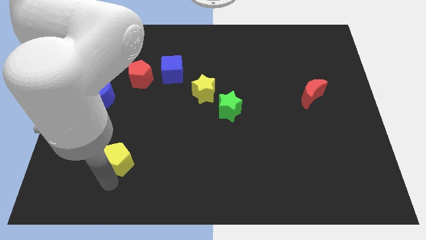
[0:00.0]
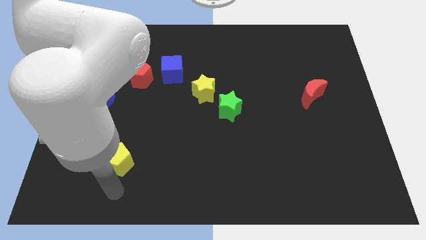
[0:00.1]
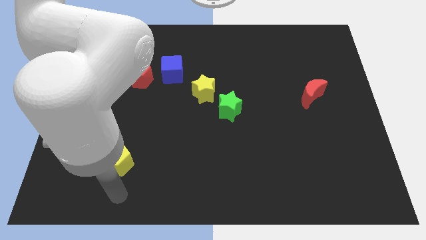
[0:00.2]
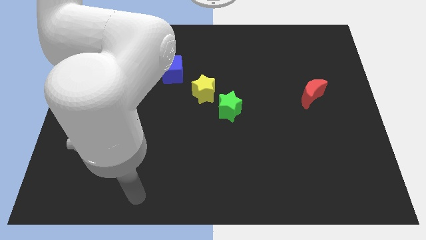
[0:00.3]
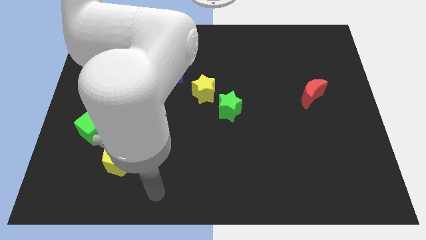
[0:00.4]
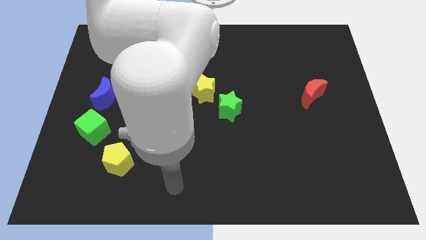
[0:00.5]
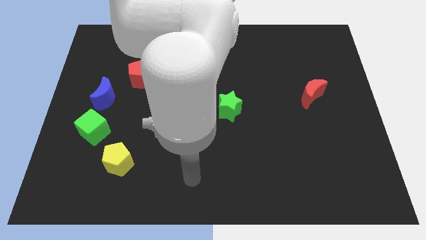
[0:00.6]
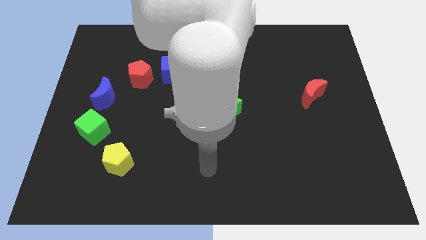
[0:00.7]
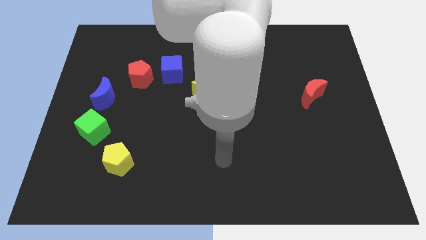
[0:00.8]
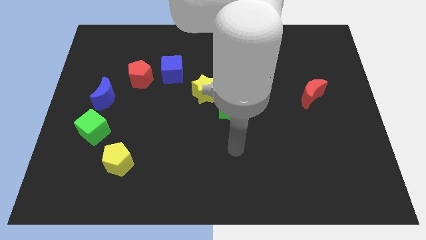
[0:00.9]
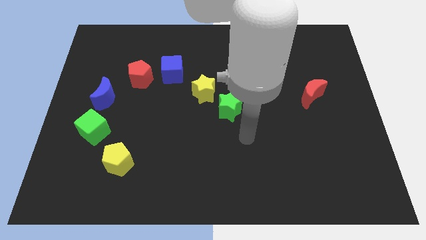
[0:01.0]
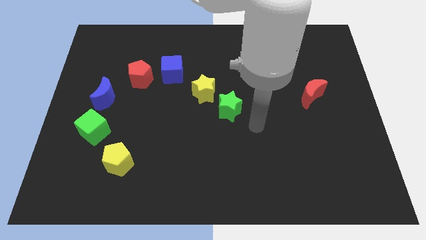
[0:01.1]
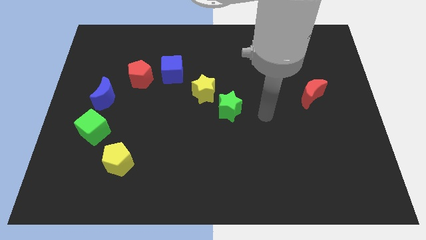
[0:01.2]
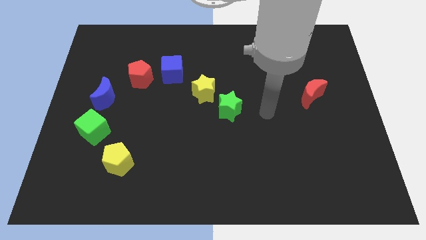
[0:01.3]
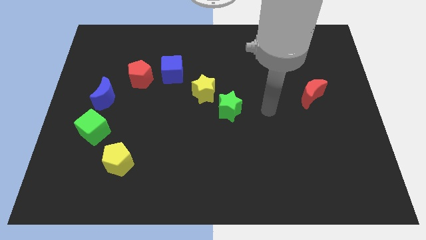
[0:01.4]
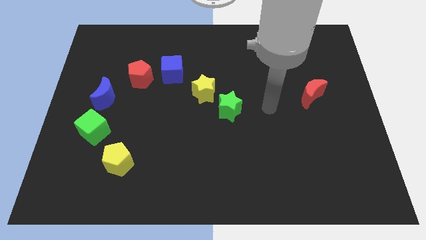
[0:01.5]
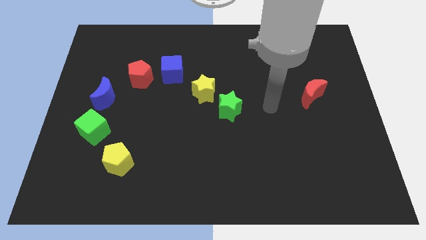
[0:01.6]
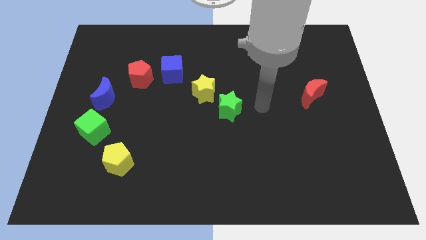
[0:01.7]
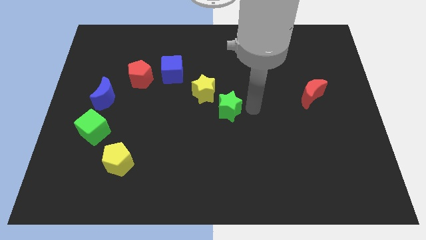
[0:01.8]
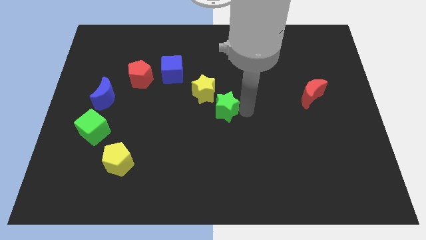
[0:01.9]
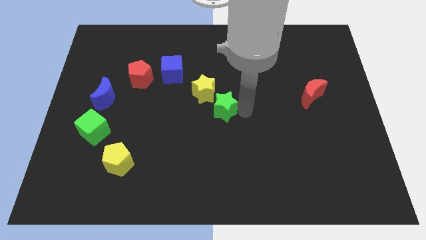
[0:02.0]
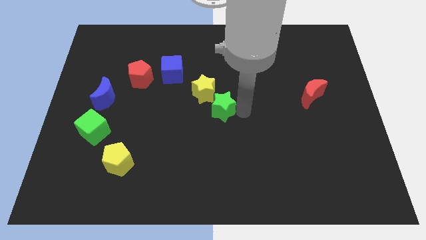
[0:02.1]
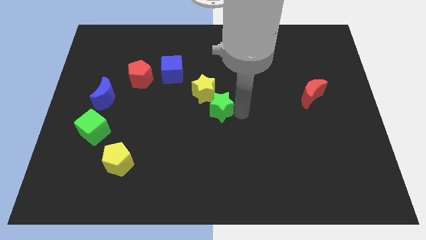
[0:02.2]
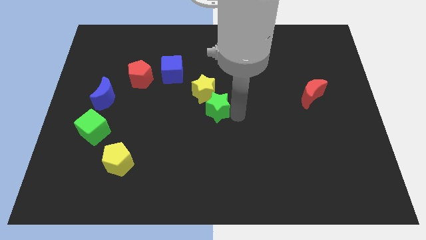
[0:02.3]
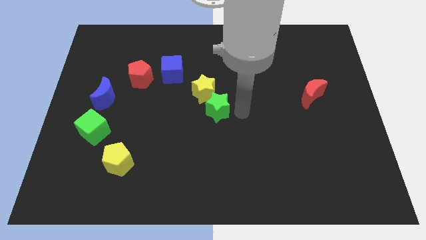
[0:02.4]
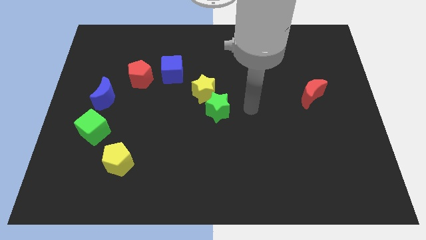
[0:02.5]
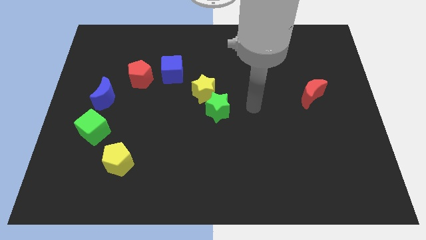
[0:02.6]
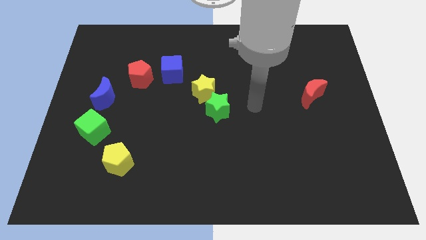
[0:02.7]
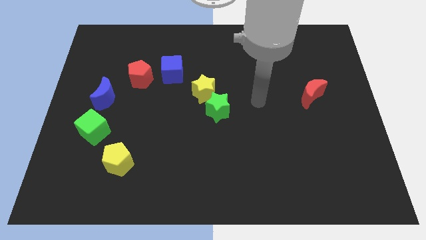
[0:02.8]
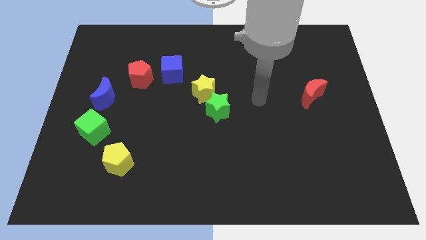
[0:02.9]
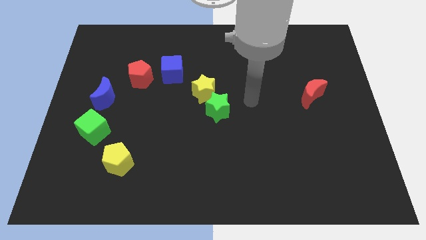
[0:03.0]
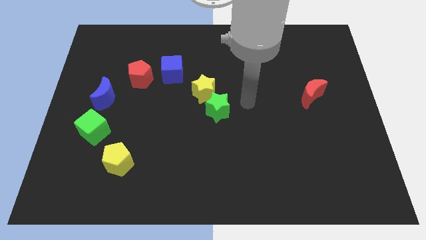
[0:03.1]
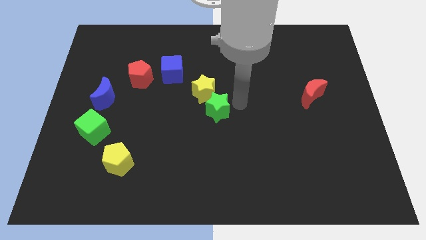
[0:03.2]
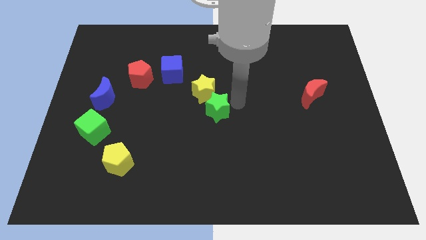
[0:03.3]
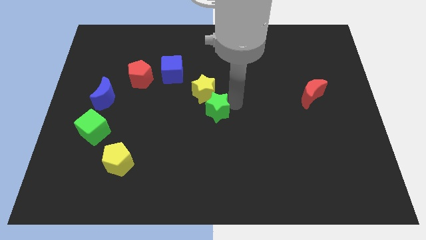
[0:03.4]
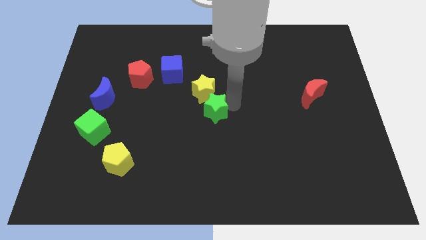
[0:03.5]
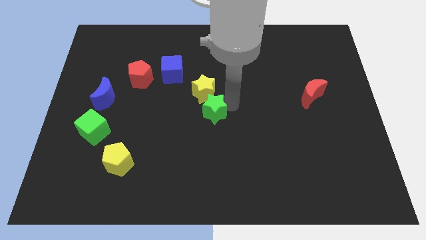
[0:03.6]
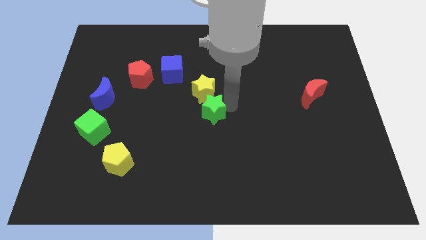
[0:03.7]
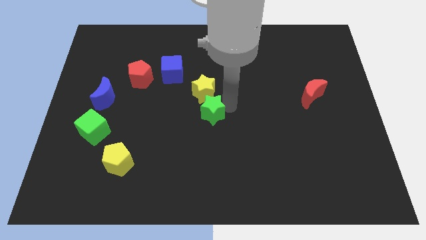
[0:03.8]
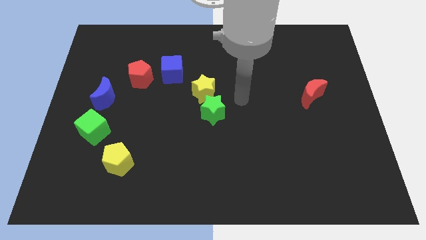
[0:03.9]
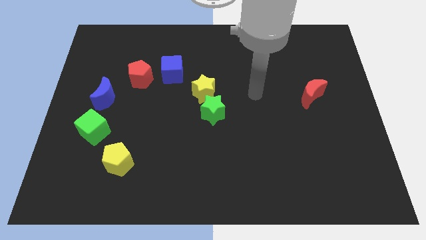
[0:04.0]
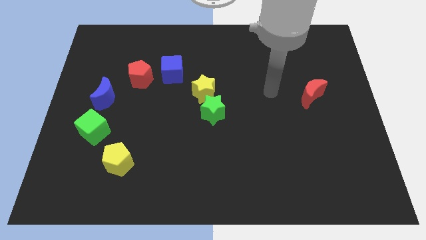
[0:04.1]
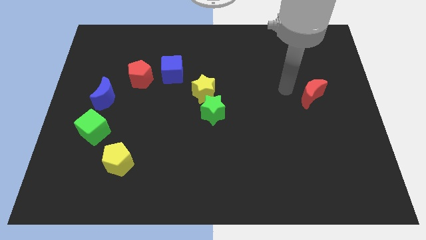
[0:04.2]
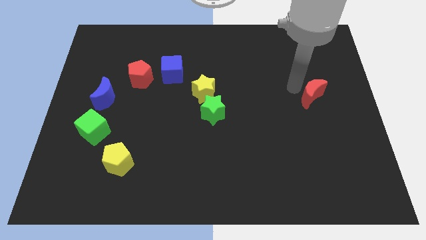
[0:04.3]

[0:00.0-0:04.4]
move the green star to the center of board

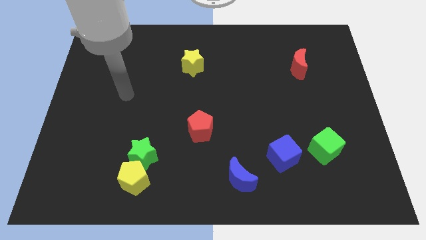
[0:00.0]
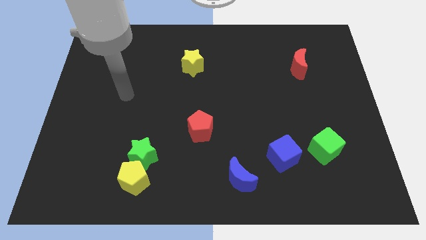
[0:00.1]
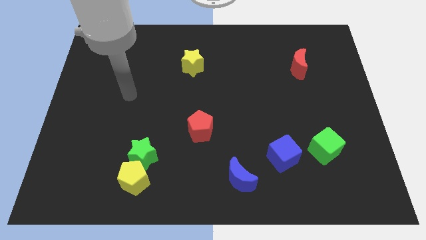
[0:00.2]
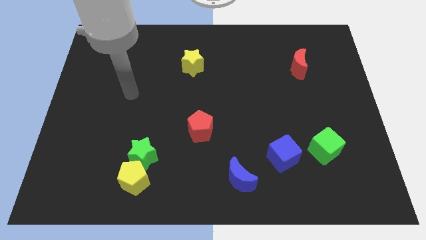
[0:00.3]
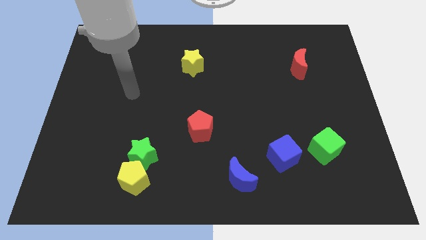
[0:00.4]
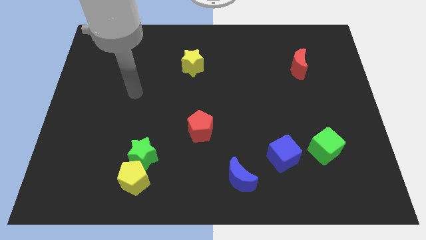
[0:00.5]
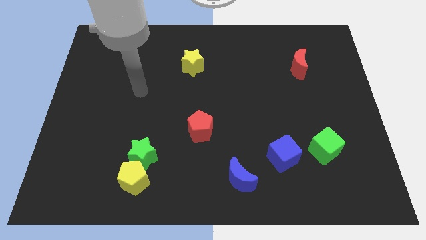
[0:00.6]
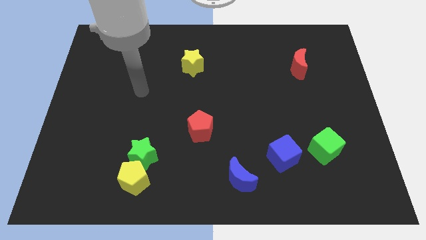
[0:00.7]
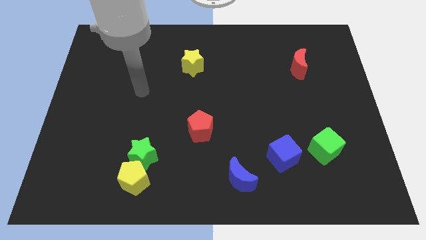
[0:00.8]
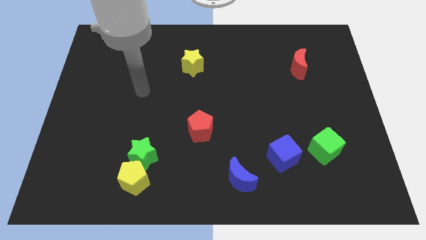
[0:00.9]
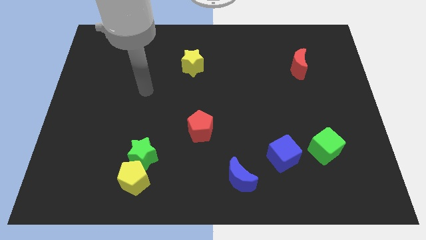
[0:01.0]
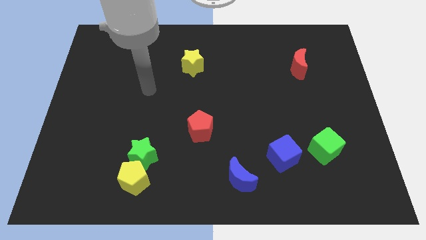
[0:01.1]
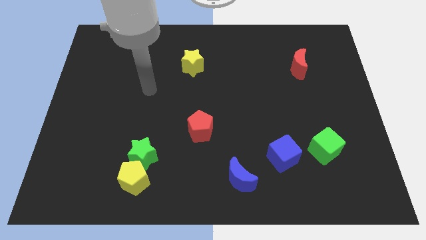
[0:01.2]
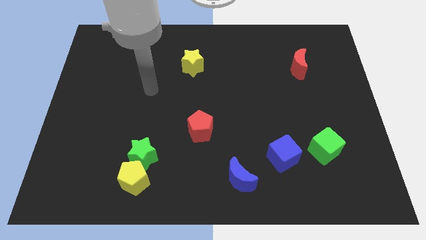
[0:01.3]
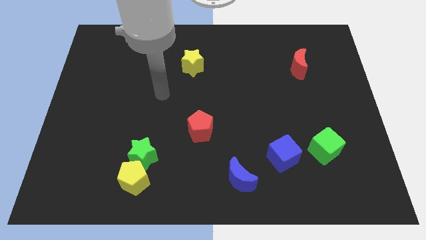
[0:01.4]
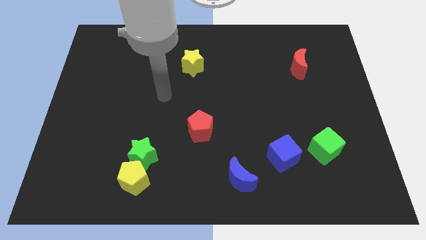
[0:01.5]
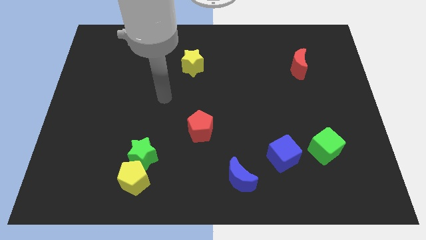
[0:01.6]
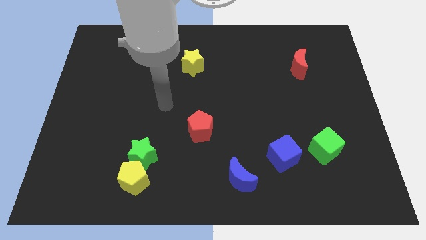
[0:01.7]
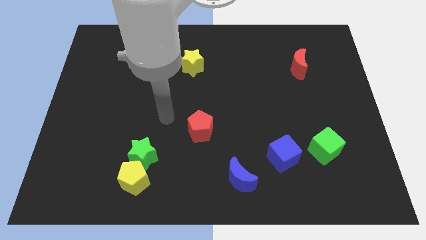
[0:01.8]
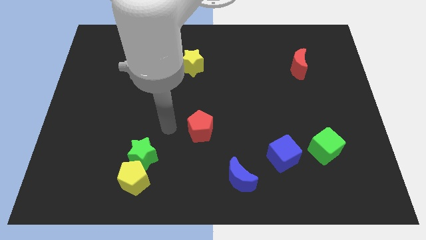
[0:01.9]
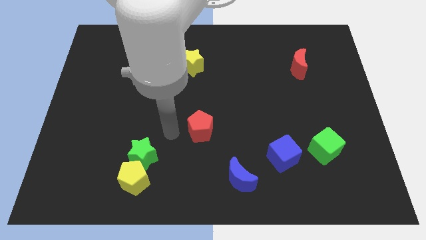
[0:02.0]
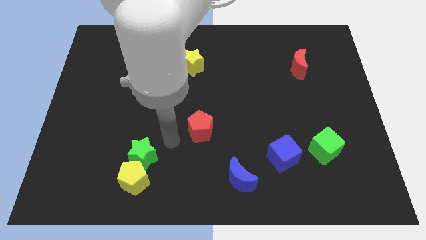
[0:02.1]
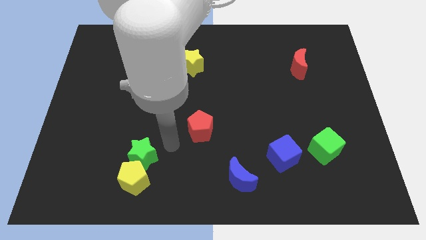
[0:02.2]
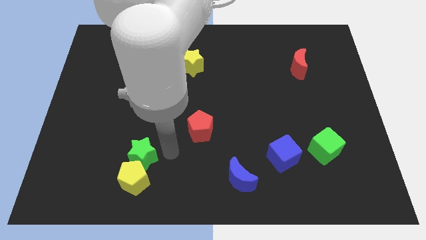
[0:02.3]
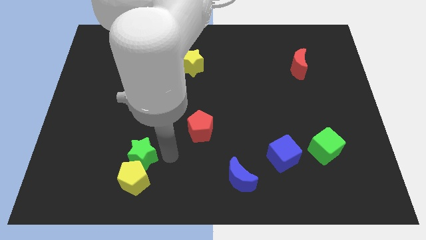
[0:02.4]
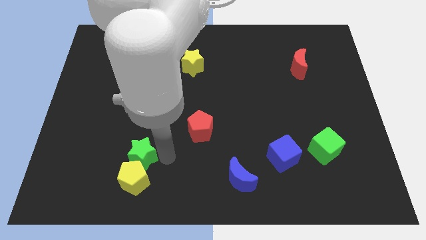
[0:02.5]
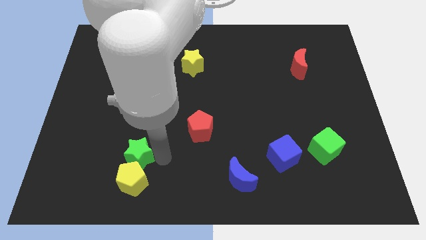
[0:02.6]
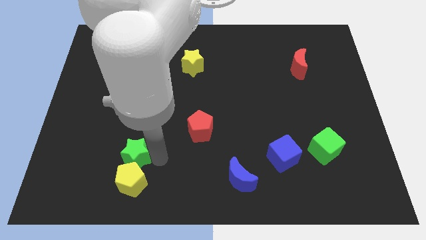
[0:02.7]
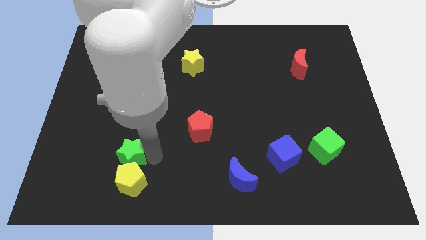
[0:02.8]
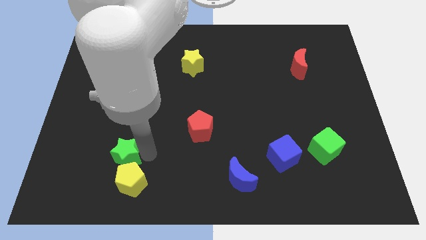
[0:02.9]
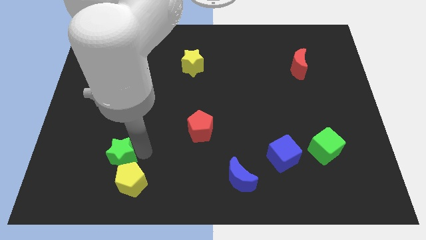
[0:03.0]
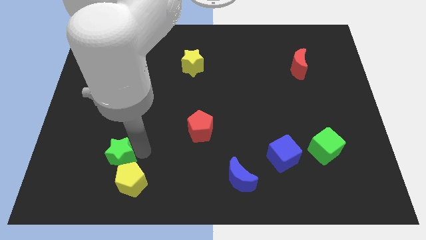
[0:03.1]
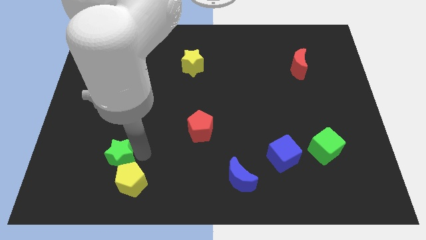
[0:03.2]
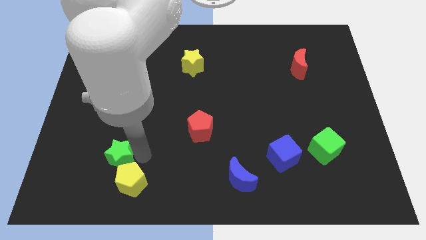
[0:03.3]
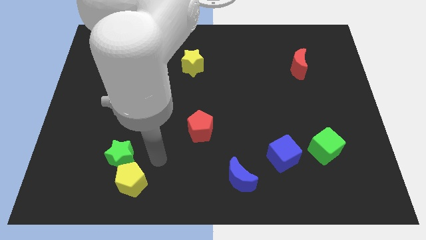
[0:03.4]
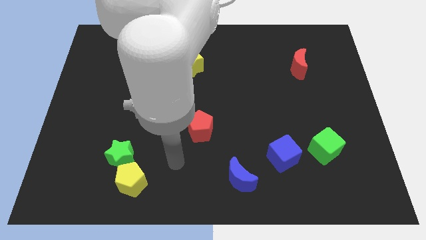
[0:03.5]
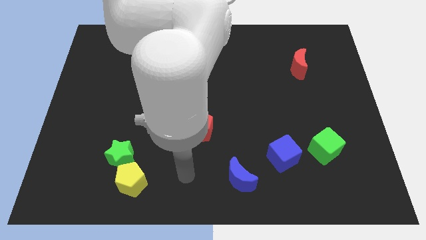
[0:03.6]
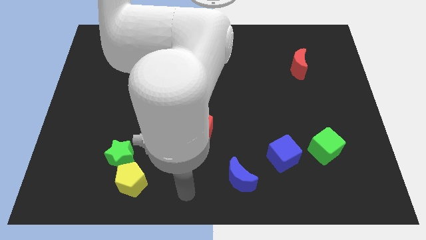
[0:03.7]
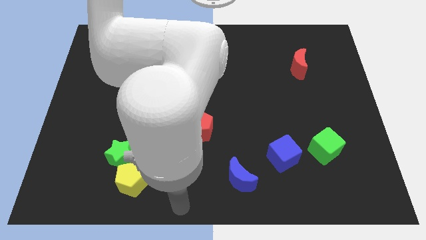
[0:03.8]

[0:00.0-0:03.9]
push the green star to the left side slightly

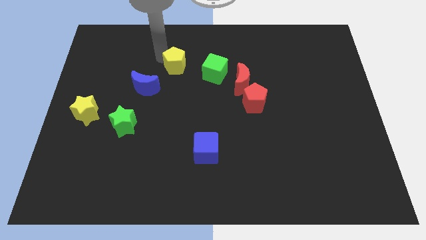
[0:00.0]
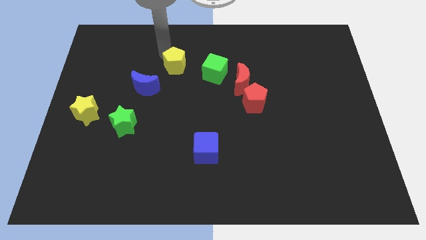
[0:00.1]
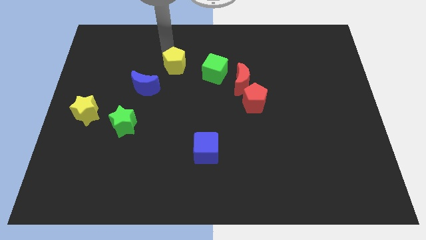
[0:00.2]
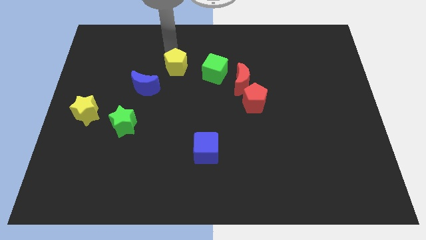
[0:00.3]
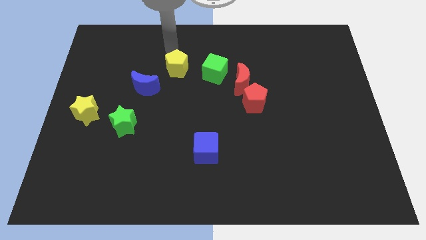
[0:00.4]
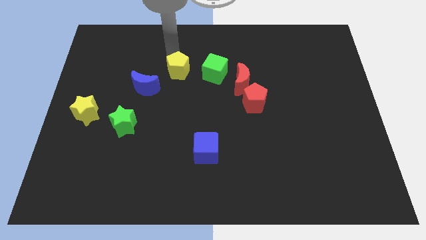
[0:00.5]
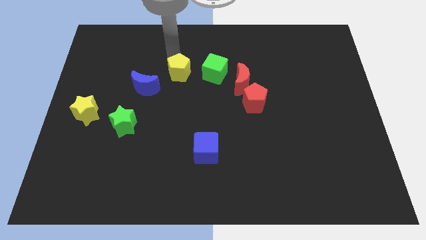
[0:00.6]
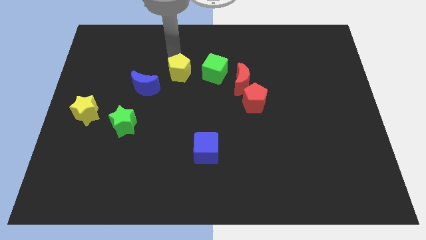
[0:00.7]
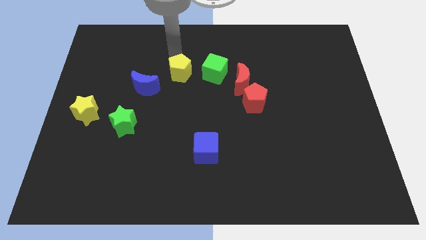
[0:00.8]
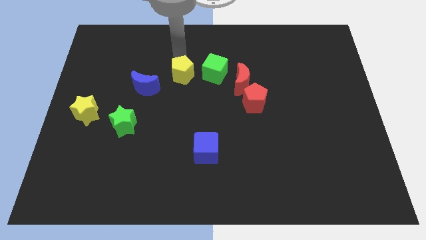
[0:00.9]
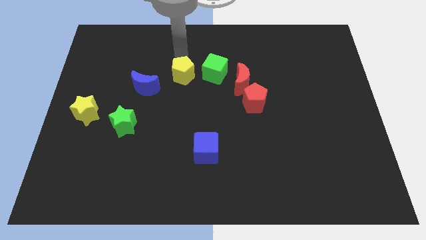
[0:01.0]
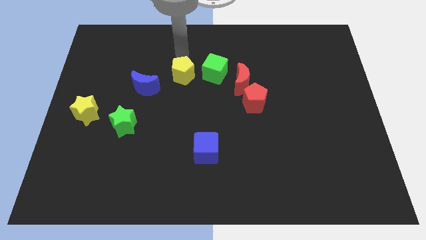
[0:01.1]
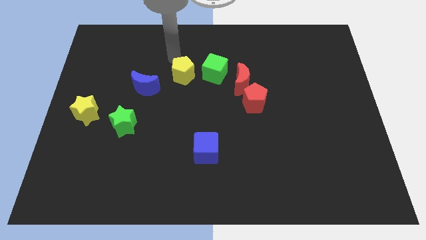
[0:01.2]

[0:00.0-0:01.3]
move the yellow pentagon near the green cube
